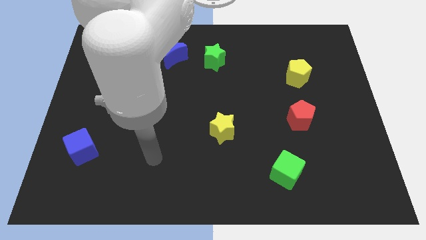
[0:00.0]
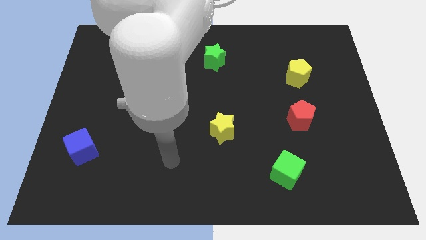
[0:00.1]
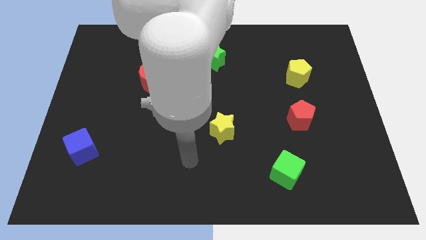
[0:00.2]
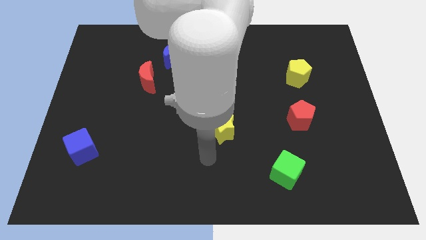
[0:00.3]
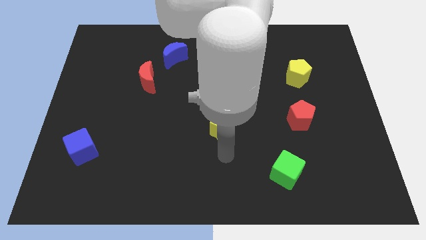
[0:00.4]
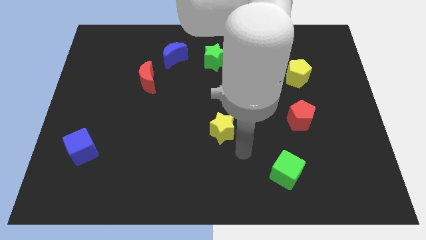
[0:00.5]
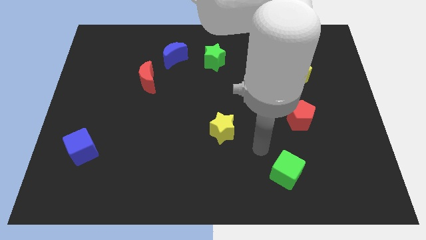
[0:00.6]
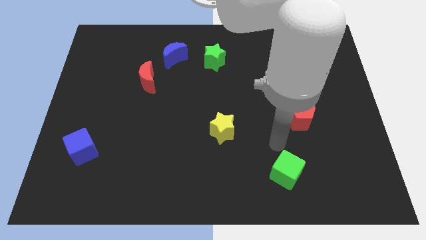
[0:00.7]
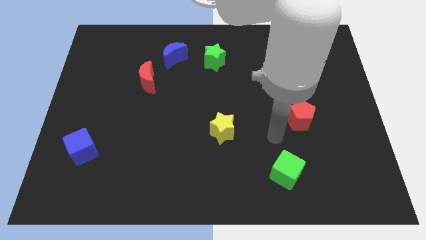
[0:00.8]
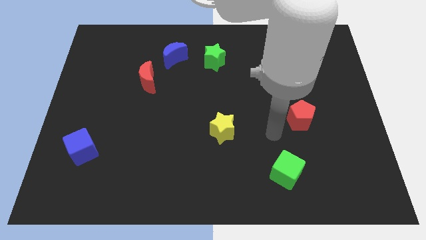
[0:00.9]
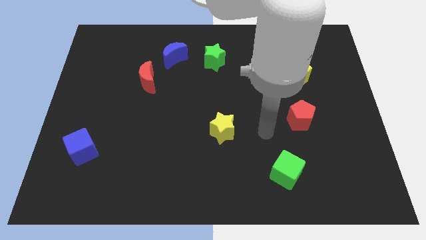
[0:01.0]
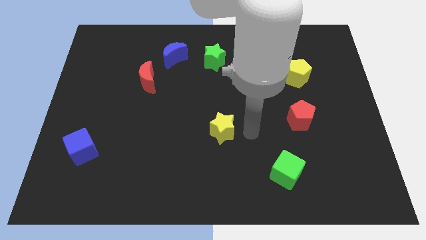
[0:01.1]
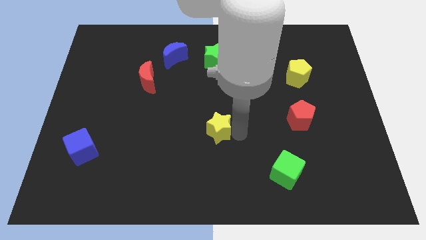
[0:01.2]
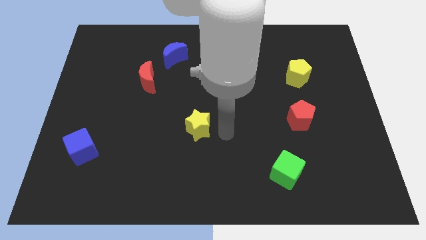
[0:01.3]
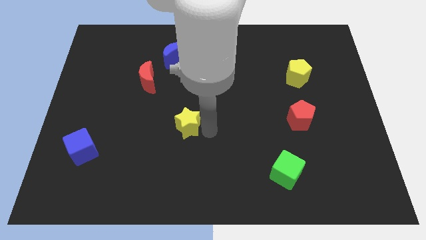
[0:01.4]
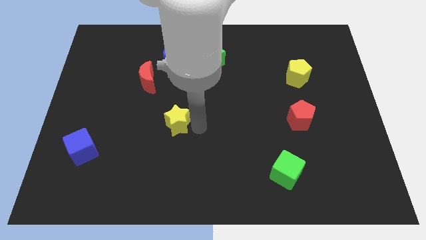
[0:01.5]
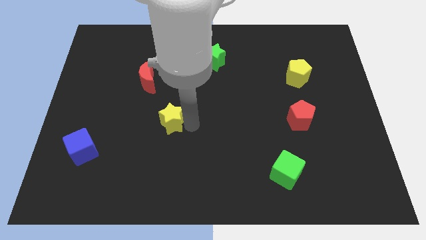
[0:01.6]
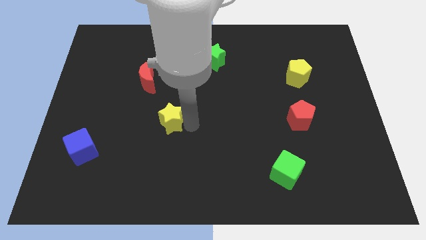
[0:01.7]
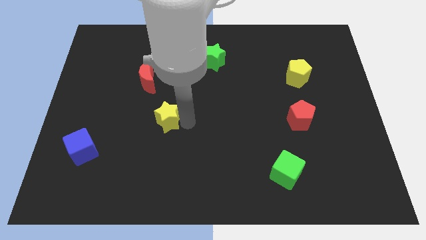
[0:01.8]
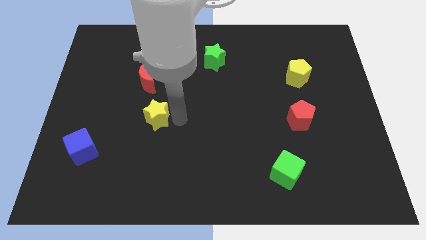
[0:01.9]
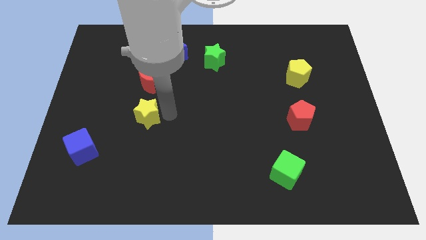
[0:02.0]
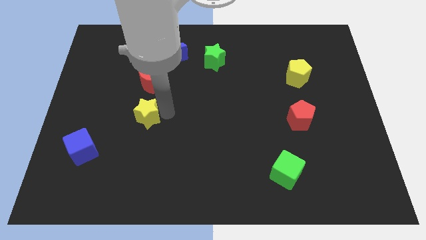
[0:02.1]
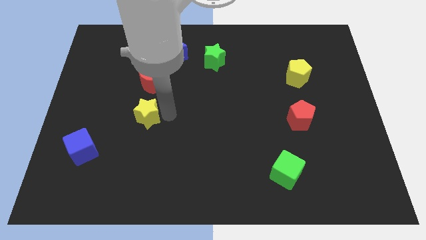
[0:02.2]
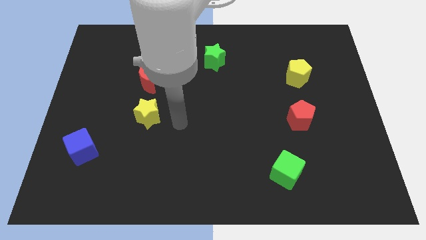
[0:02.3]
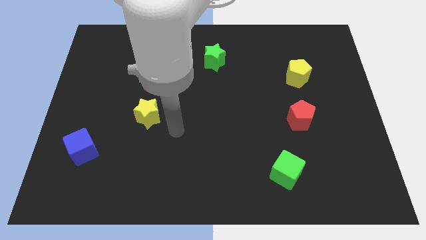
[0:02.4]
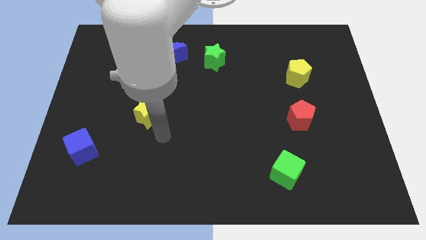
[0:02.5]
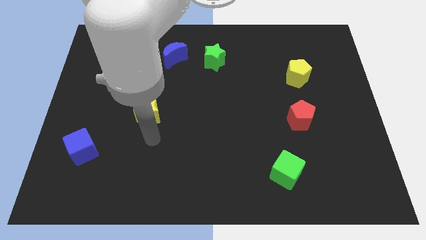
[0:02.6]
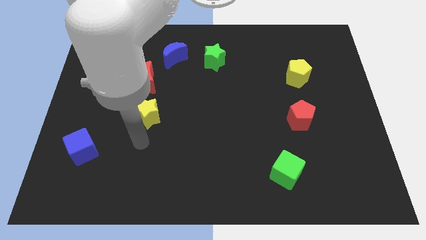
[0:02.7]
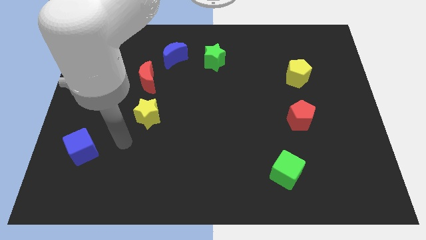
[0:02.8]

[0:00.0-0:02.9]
put the yellow star below the red moon

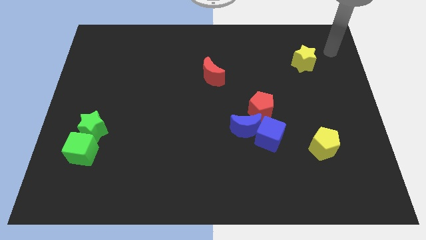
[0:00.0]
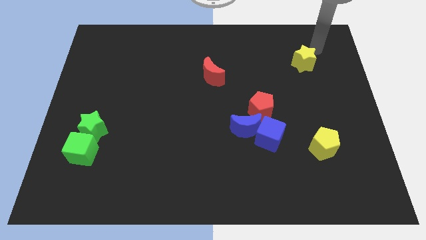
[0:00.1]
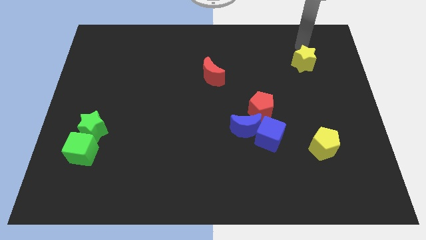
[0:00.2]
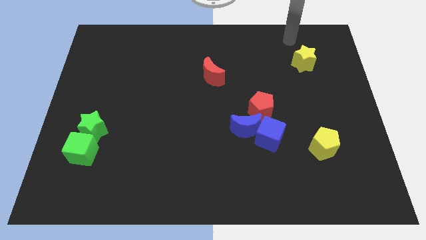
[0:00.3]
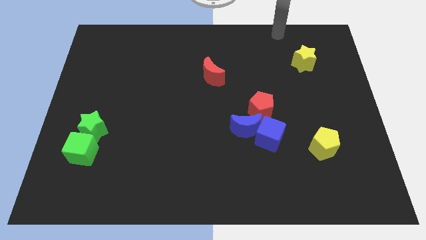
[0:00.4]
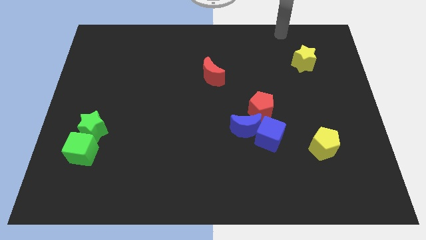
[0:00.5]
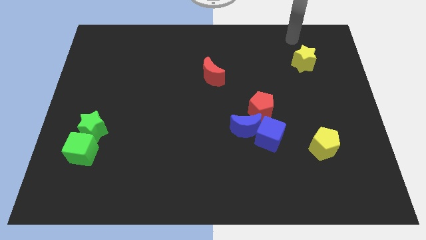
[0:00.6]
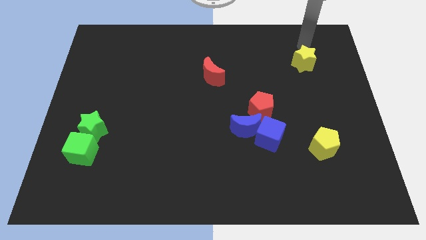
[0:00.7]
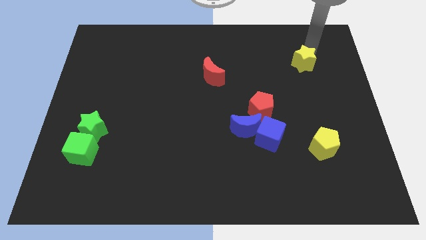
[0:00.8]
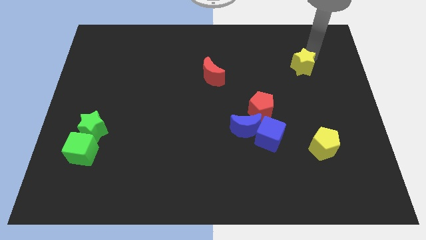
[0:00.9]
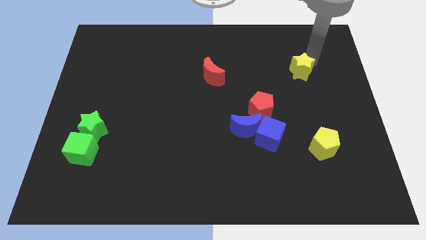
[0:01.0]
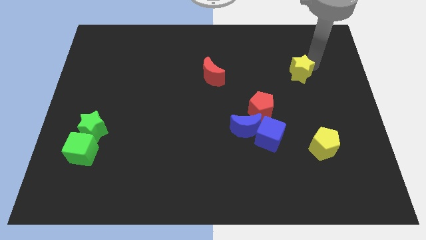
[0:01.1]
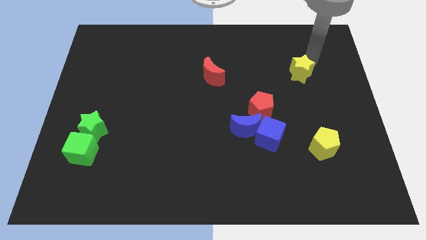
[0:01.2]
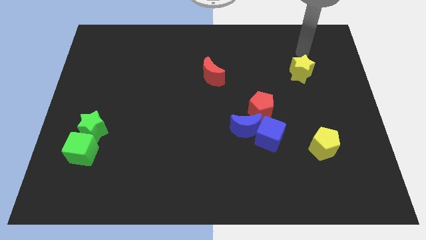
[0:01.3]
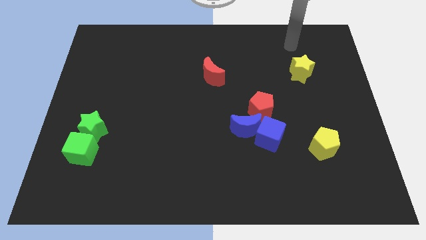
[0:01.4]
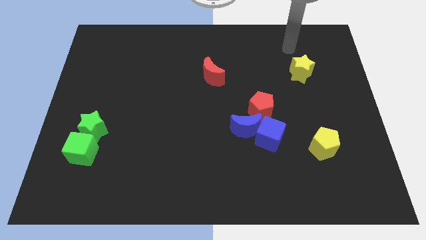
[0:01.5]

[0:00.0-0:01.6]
push the yellow star slightly towards the bottom

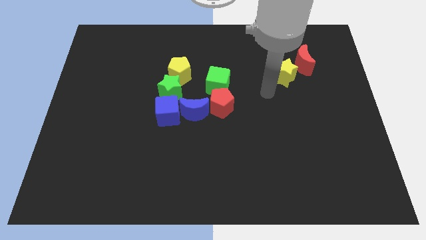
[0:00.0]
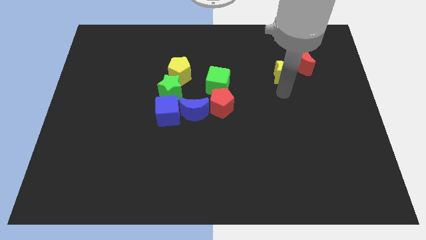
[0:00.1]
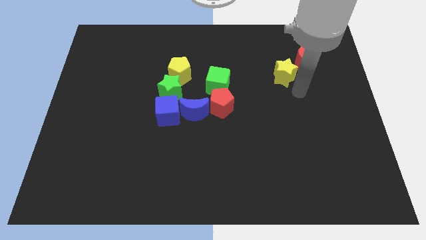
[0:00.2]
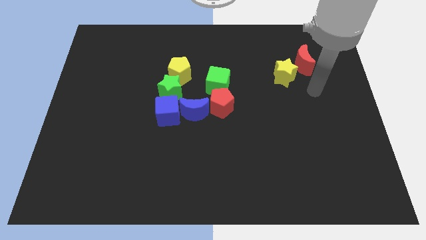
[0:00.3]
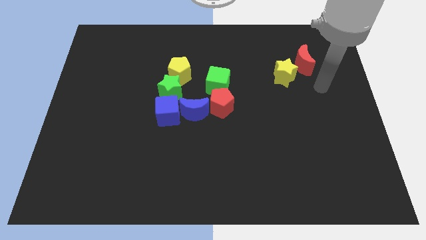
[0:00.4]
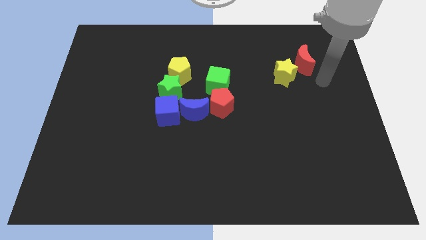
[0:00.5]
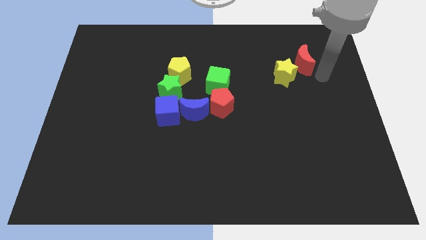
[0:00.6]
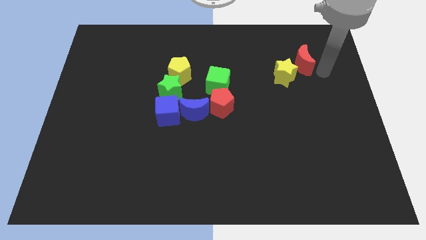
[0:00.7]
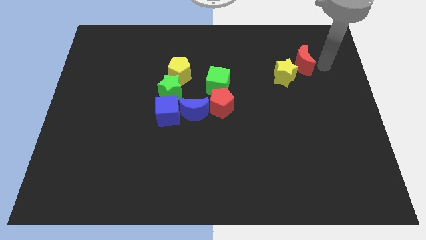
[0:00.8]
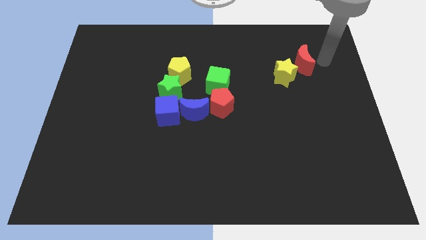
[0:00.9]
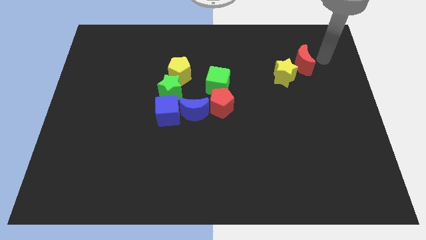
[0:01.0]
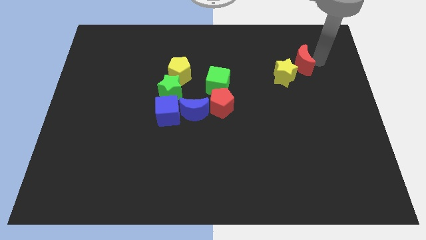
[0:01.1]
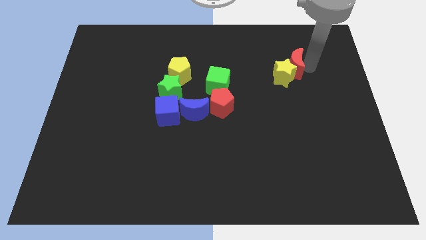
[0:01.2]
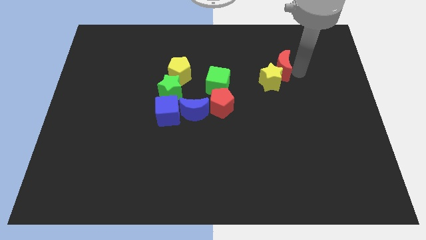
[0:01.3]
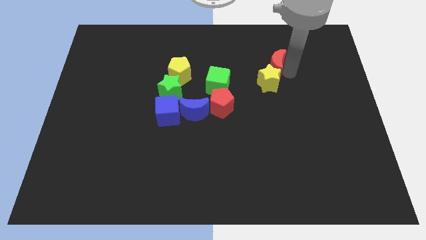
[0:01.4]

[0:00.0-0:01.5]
push the red crescent into yellow star

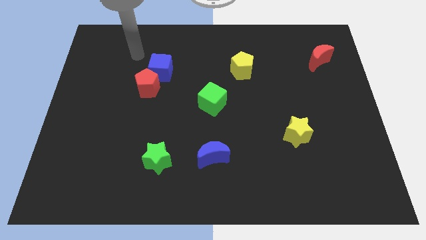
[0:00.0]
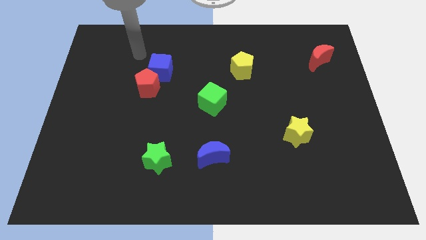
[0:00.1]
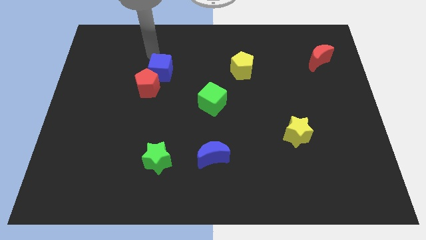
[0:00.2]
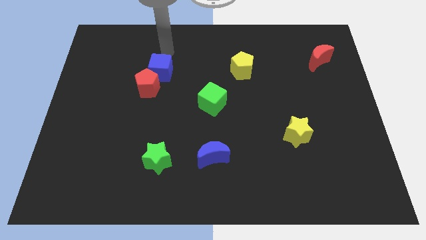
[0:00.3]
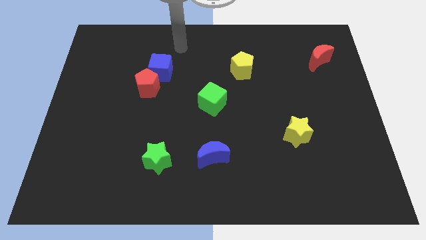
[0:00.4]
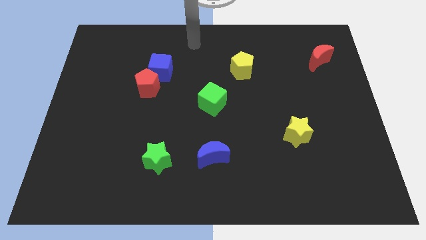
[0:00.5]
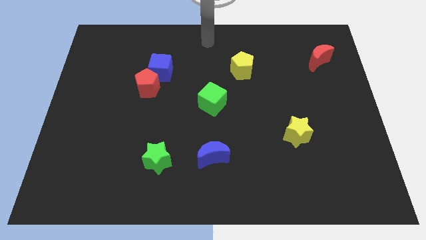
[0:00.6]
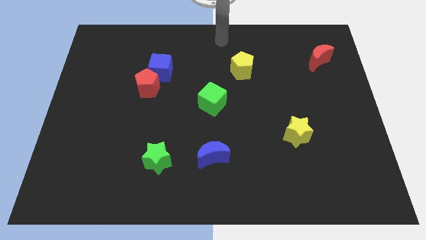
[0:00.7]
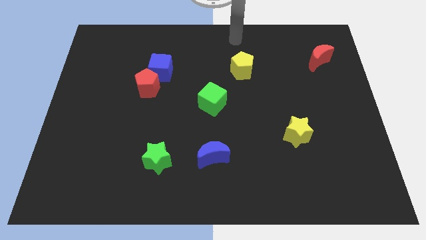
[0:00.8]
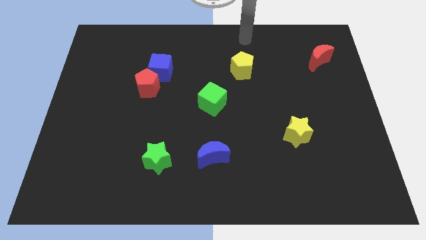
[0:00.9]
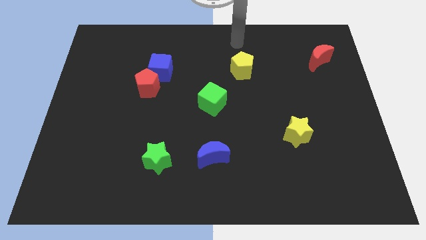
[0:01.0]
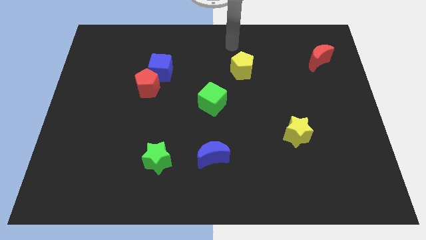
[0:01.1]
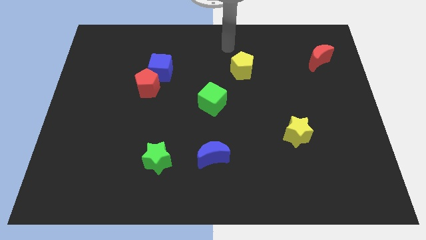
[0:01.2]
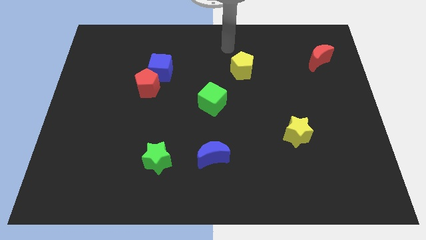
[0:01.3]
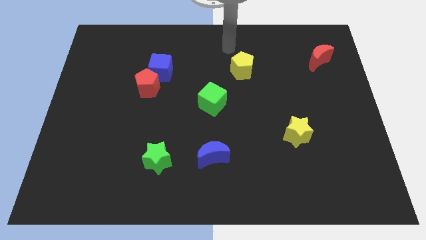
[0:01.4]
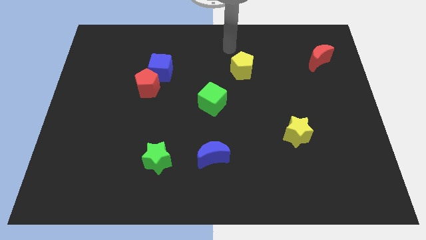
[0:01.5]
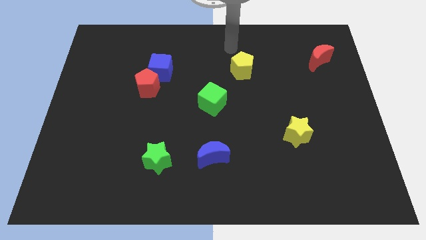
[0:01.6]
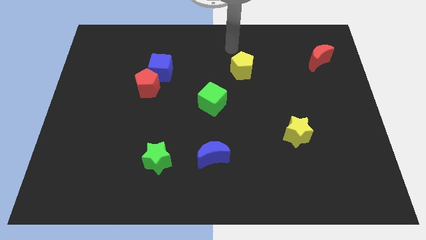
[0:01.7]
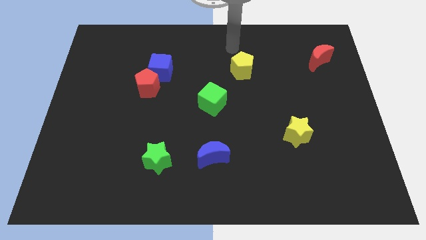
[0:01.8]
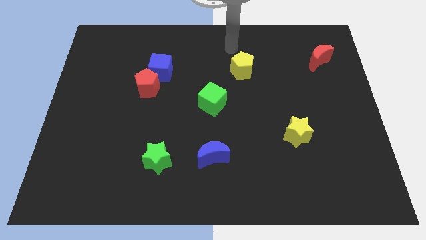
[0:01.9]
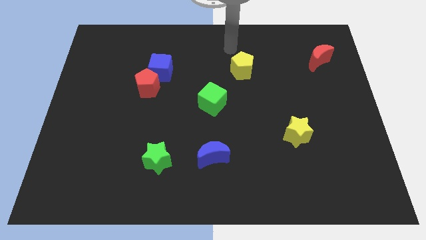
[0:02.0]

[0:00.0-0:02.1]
place your hand above the yellow pentagon

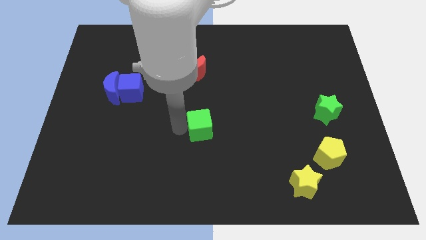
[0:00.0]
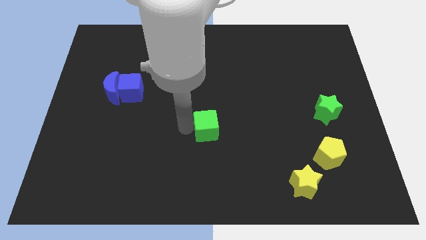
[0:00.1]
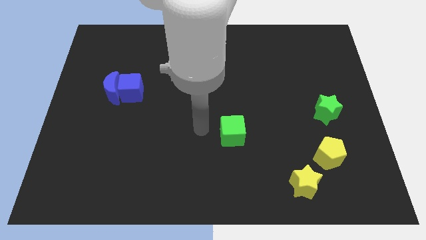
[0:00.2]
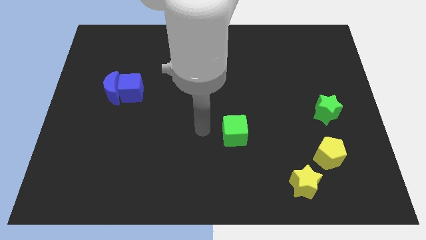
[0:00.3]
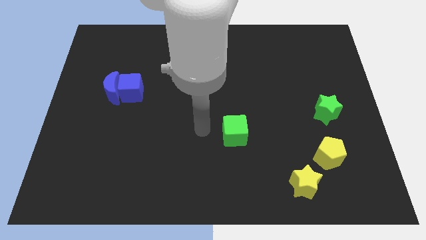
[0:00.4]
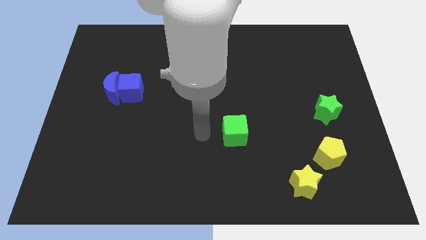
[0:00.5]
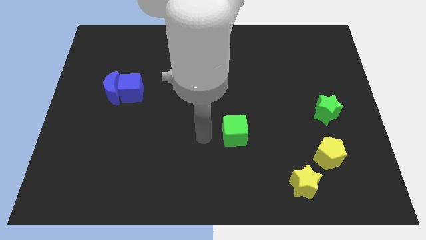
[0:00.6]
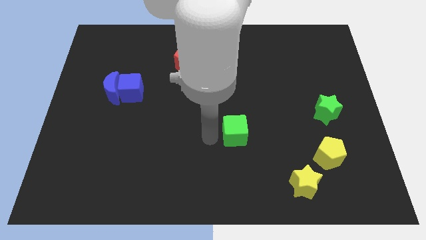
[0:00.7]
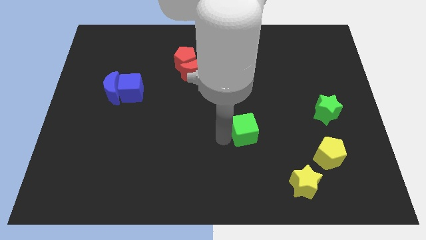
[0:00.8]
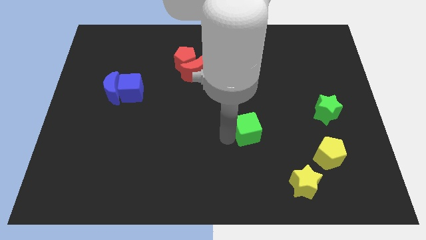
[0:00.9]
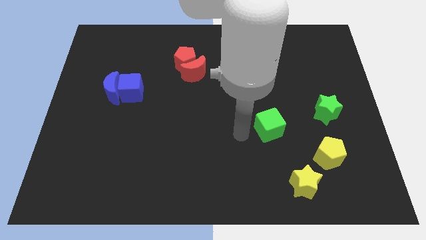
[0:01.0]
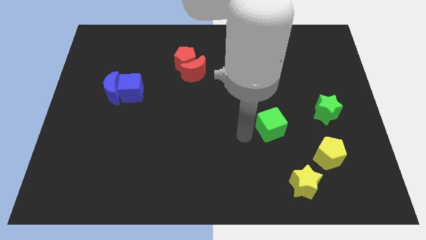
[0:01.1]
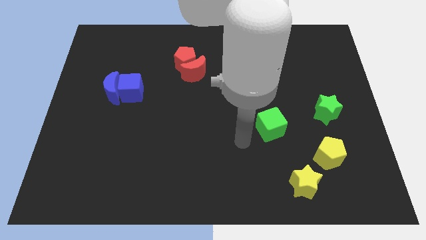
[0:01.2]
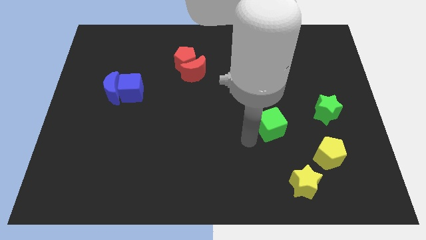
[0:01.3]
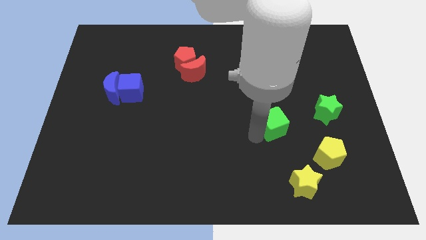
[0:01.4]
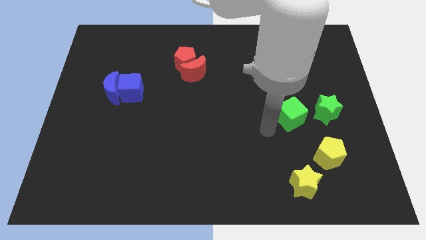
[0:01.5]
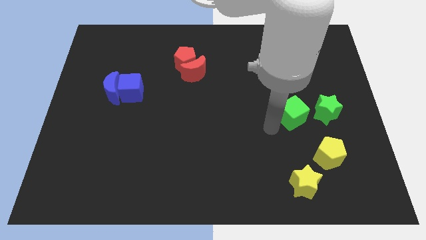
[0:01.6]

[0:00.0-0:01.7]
place the green cube left beside the green star
